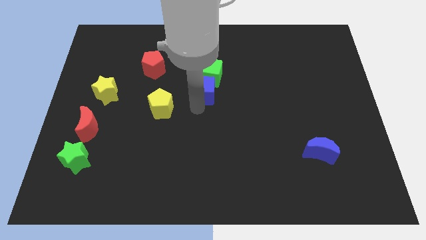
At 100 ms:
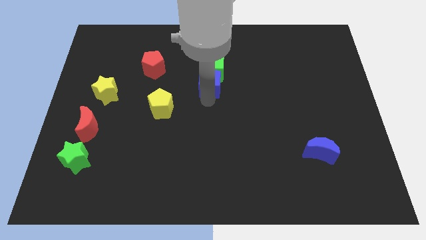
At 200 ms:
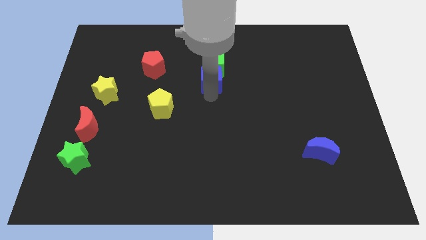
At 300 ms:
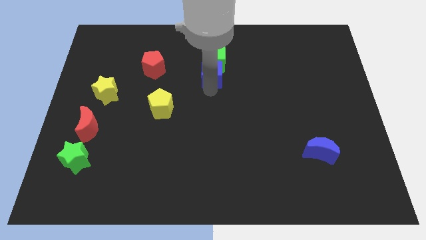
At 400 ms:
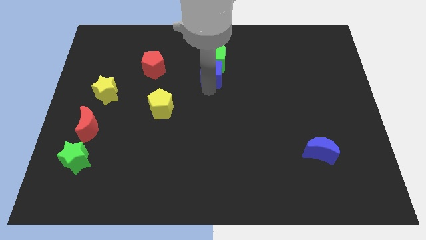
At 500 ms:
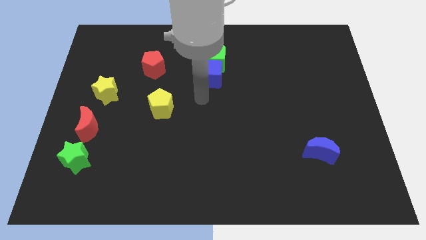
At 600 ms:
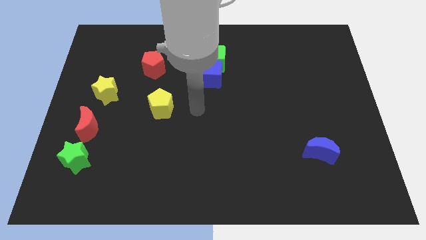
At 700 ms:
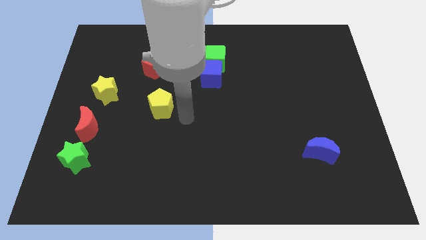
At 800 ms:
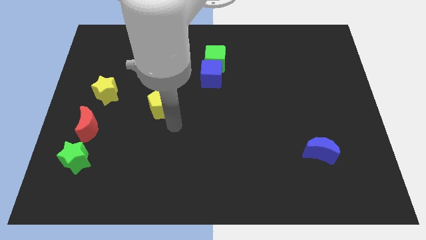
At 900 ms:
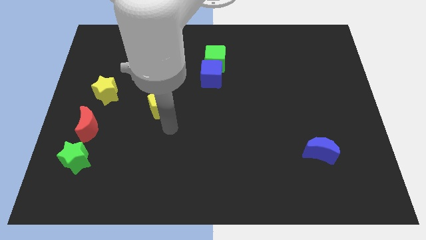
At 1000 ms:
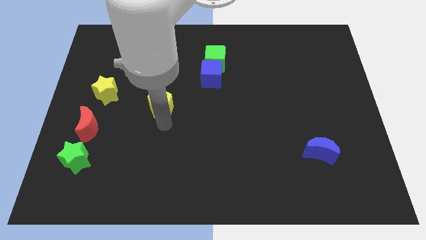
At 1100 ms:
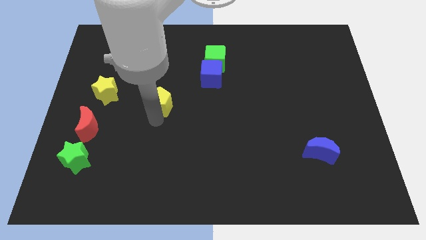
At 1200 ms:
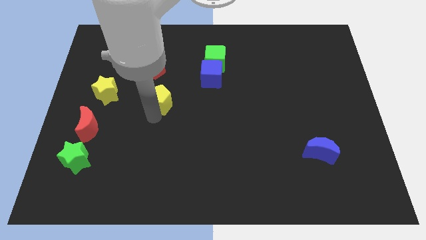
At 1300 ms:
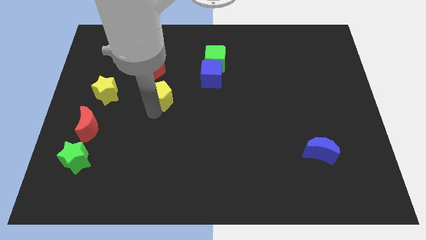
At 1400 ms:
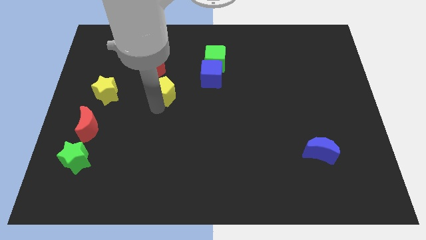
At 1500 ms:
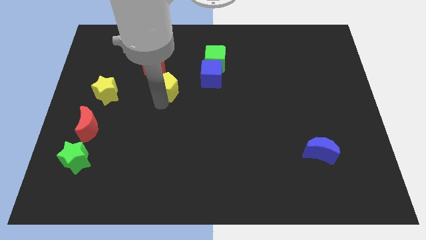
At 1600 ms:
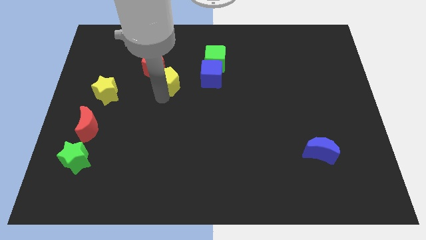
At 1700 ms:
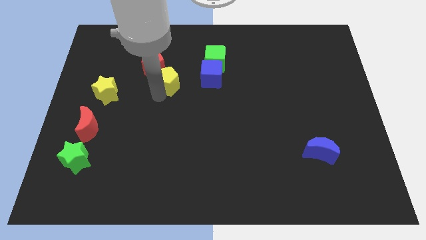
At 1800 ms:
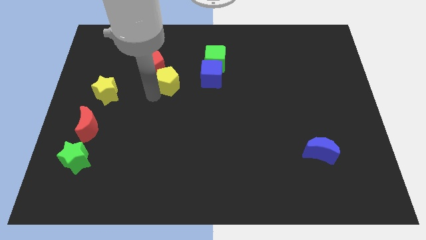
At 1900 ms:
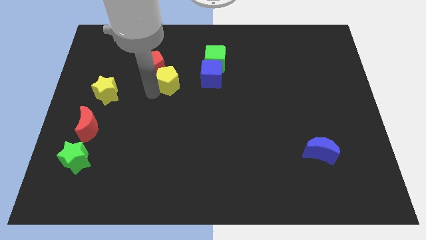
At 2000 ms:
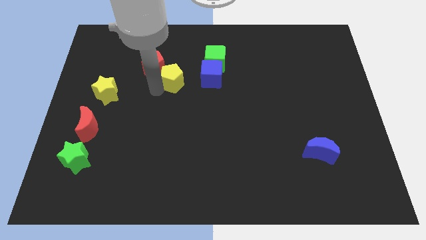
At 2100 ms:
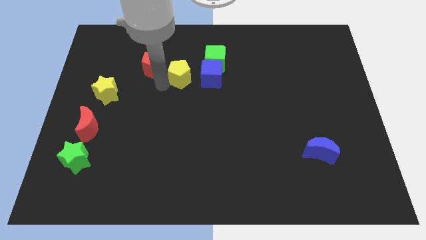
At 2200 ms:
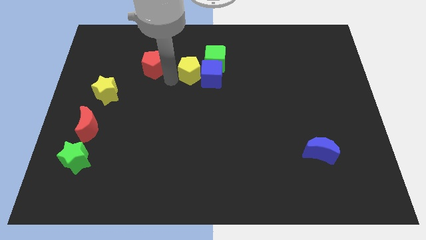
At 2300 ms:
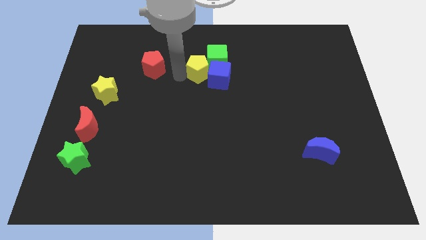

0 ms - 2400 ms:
push the yellow pentagon to the left of the blue cube

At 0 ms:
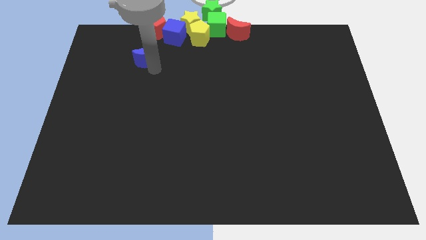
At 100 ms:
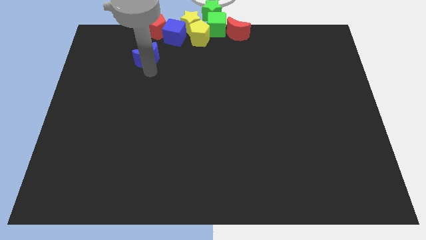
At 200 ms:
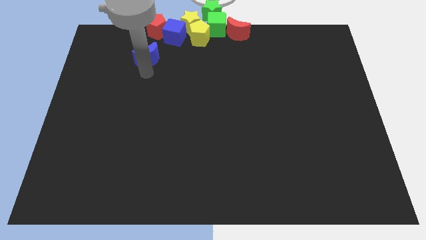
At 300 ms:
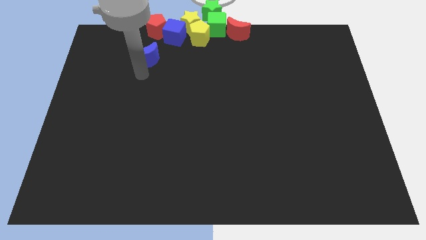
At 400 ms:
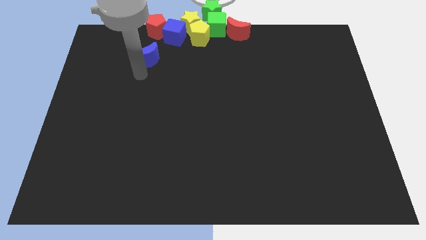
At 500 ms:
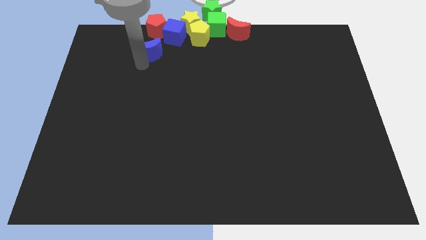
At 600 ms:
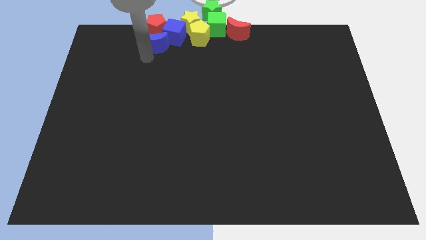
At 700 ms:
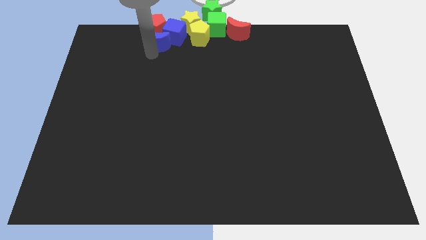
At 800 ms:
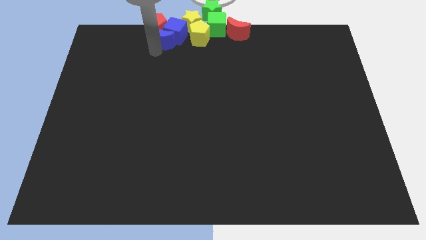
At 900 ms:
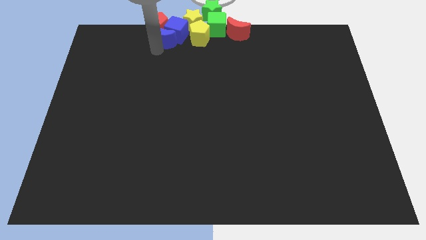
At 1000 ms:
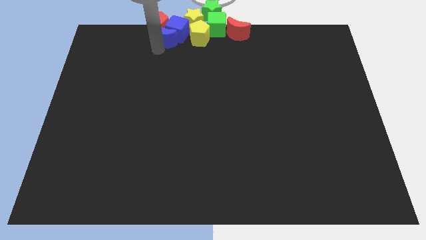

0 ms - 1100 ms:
move blue crescent into the group of objects

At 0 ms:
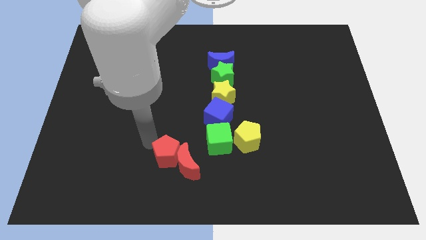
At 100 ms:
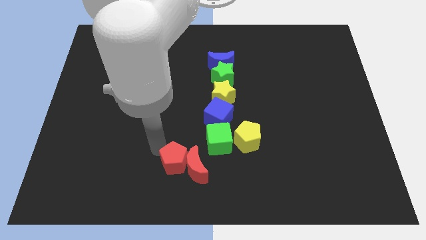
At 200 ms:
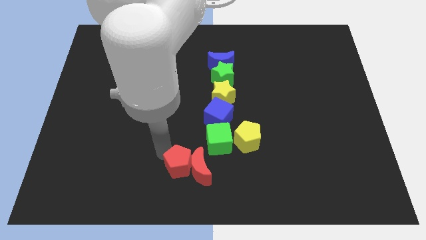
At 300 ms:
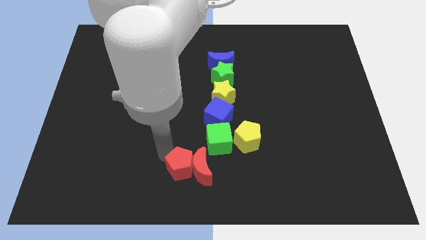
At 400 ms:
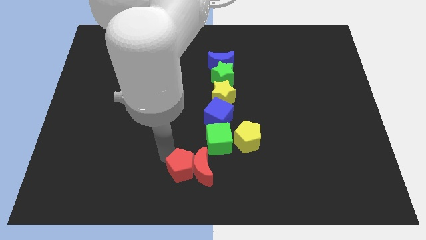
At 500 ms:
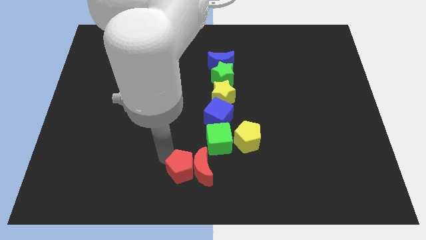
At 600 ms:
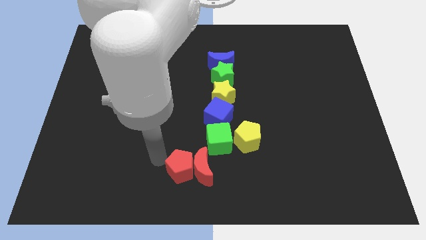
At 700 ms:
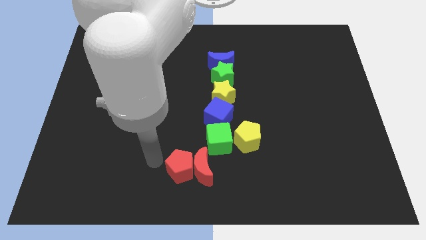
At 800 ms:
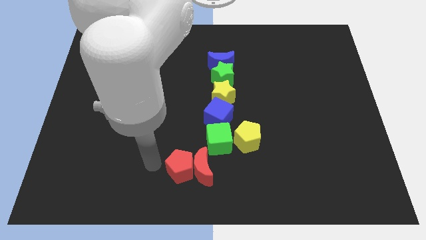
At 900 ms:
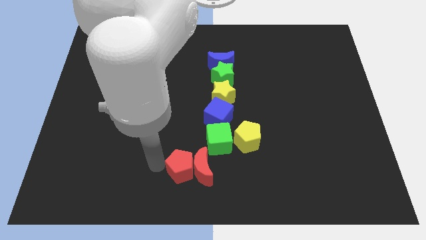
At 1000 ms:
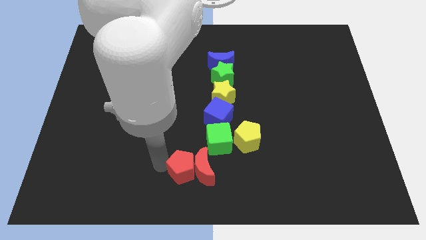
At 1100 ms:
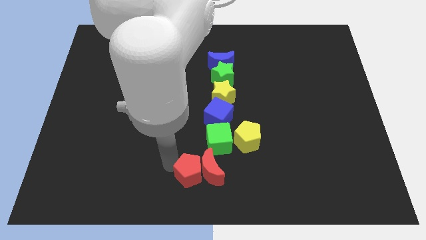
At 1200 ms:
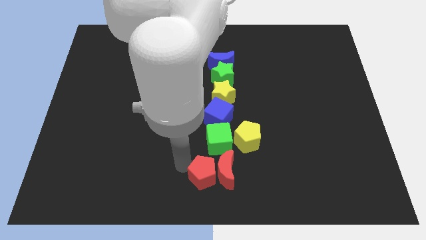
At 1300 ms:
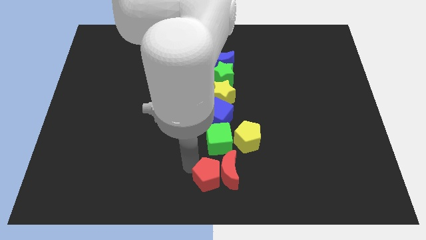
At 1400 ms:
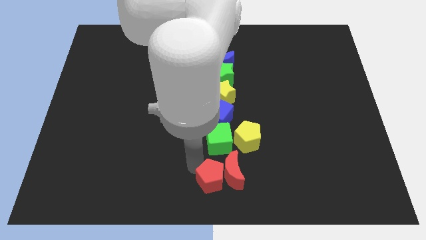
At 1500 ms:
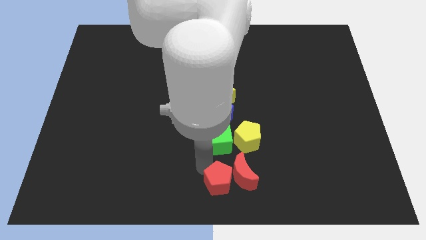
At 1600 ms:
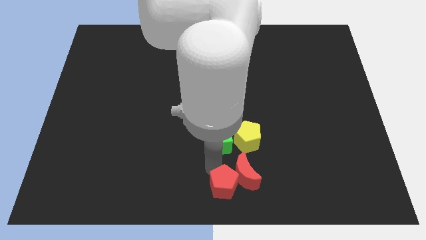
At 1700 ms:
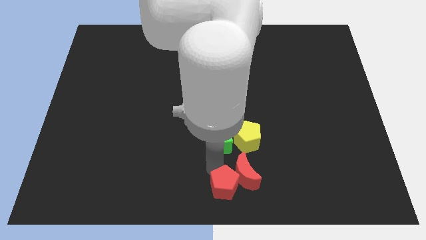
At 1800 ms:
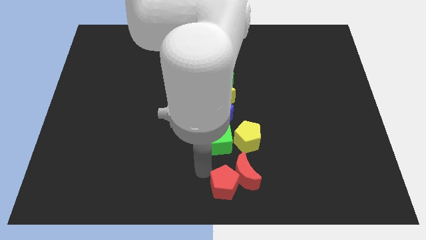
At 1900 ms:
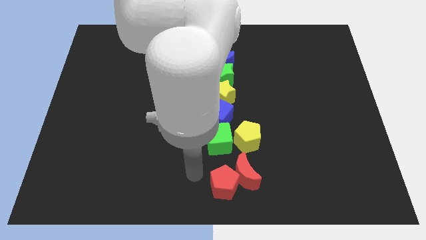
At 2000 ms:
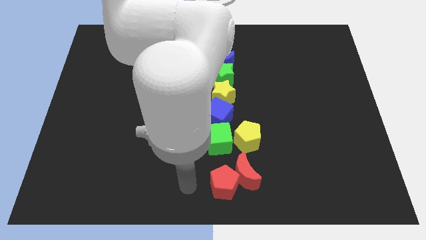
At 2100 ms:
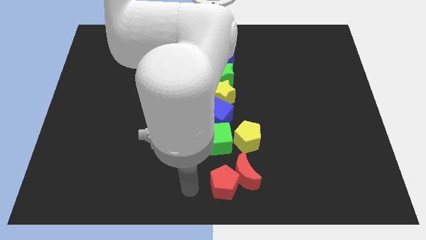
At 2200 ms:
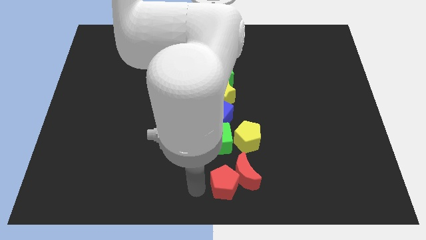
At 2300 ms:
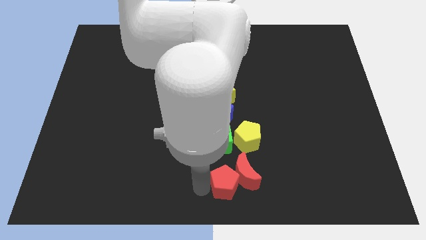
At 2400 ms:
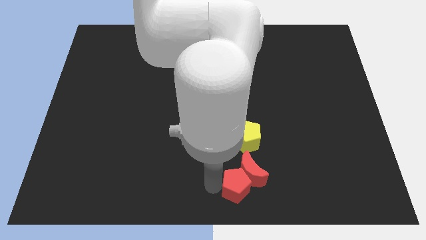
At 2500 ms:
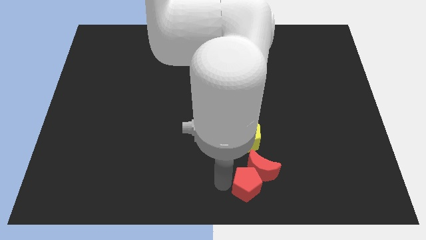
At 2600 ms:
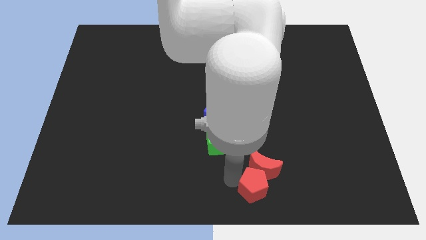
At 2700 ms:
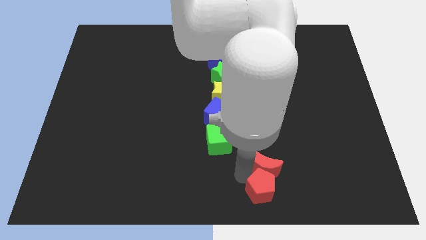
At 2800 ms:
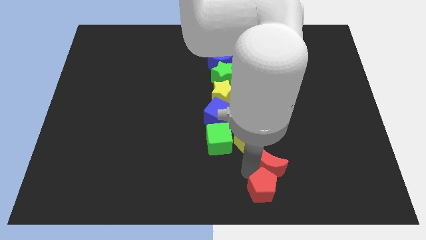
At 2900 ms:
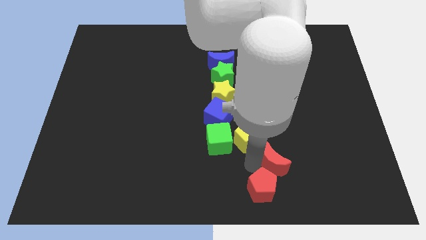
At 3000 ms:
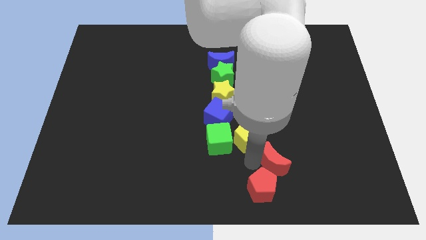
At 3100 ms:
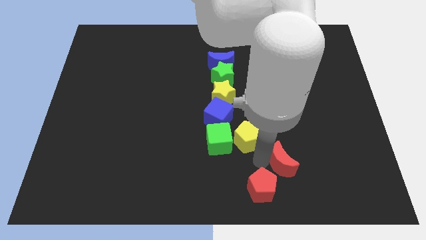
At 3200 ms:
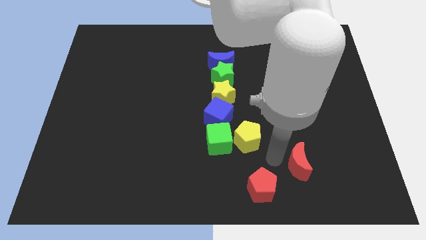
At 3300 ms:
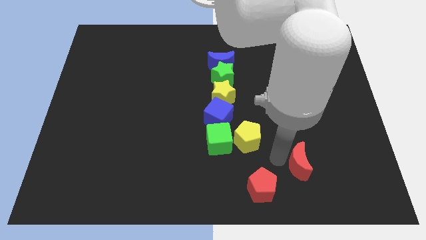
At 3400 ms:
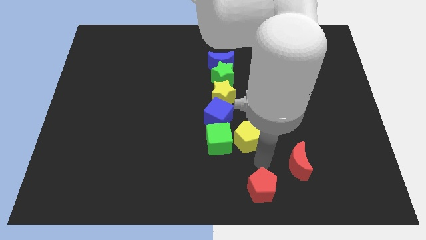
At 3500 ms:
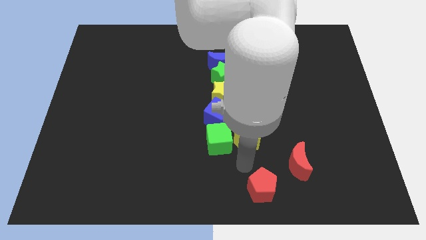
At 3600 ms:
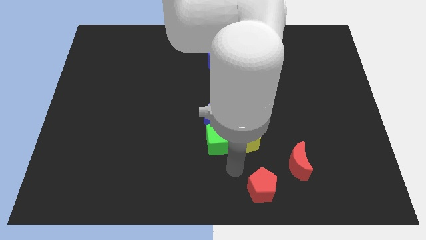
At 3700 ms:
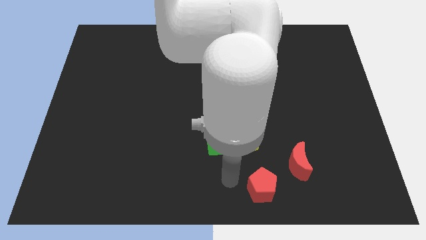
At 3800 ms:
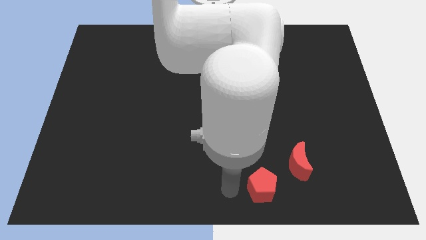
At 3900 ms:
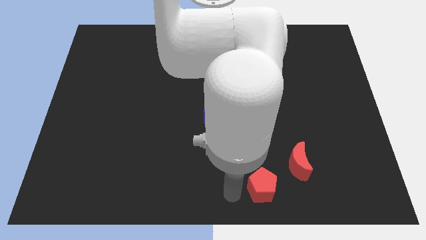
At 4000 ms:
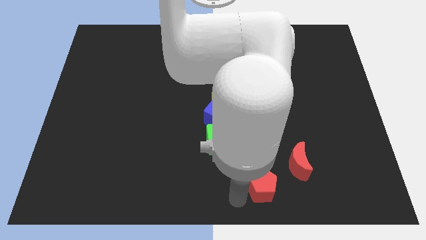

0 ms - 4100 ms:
separate the red crescent and red pentagon

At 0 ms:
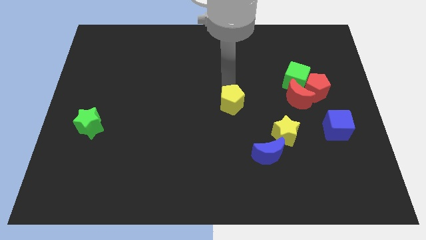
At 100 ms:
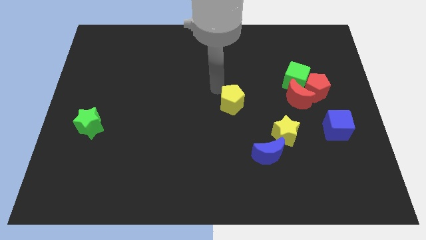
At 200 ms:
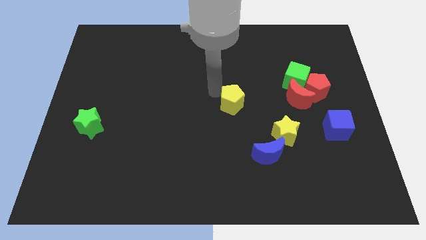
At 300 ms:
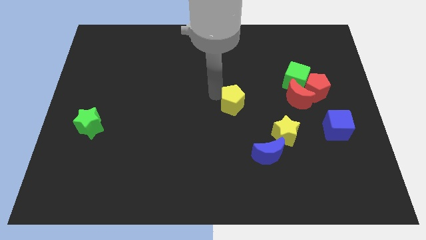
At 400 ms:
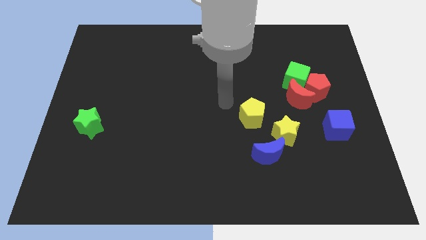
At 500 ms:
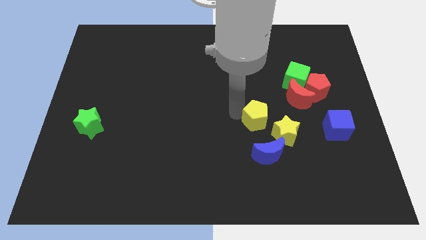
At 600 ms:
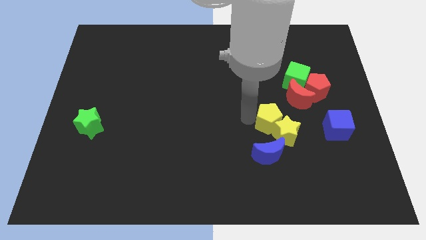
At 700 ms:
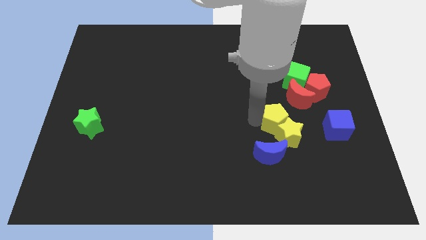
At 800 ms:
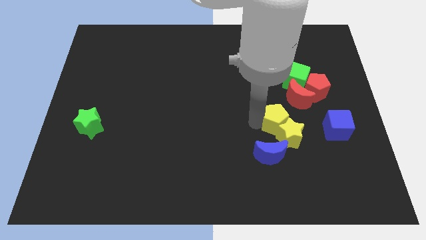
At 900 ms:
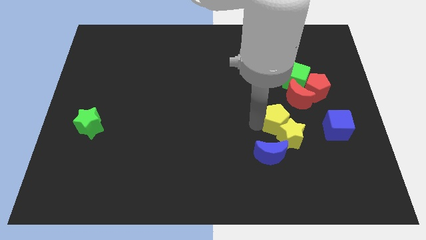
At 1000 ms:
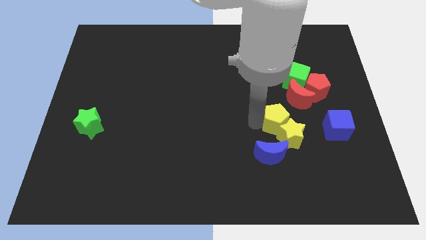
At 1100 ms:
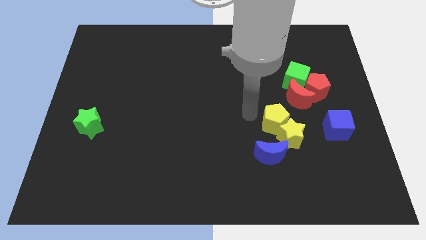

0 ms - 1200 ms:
push the yellow pentagon into the yellow star
